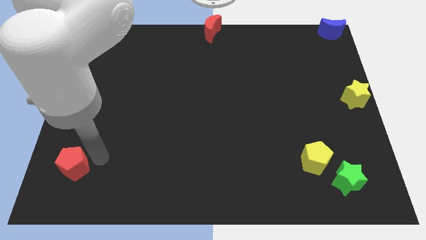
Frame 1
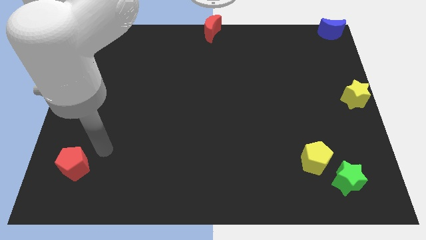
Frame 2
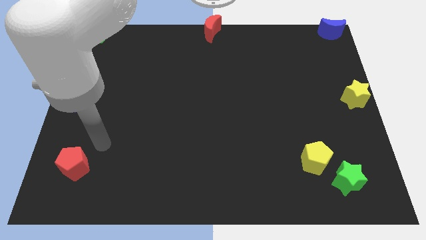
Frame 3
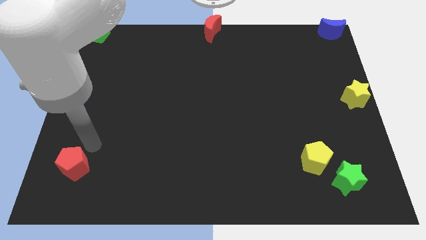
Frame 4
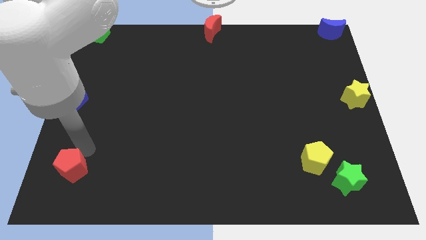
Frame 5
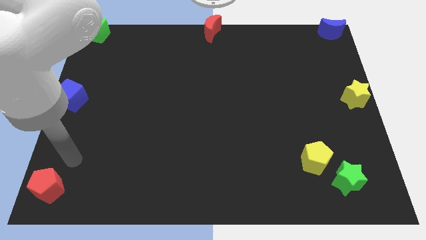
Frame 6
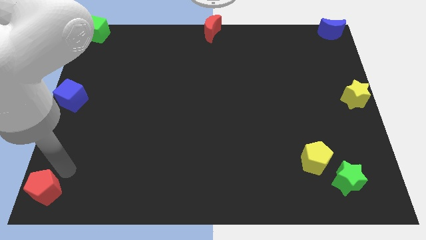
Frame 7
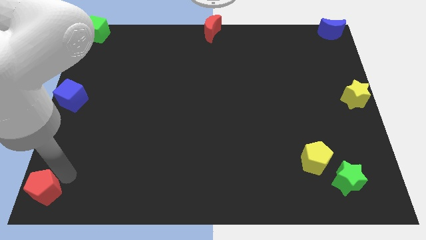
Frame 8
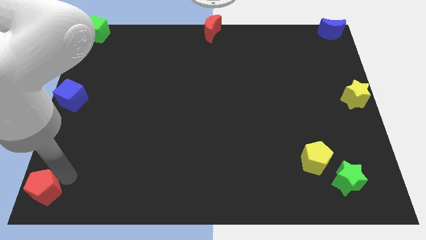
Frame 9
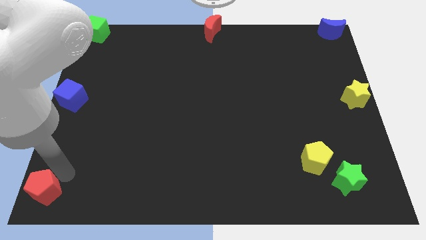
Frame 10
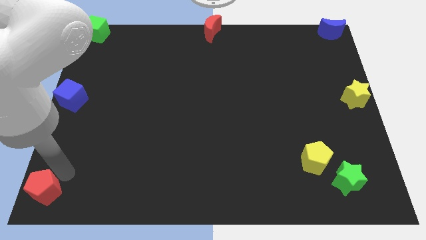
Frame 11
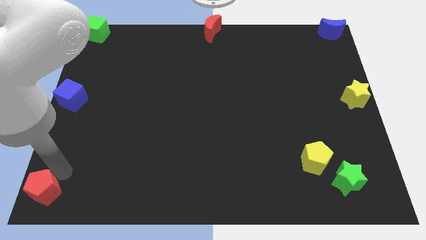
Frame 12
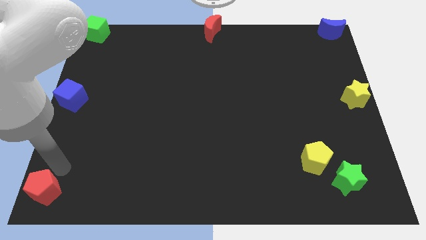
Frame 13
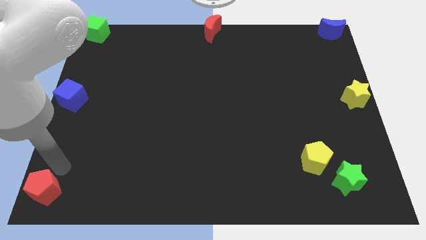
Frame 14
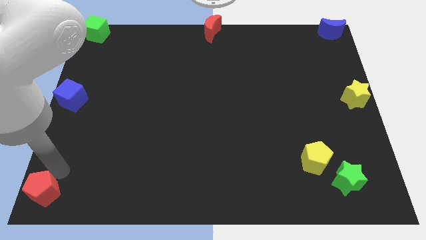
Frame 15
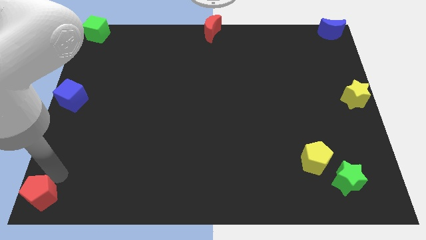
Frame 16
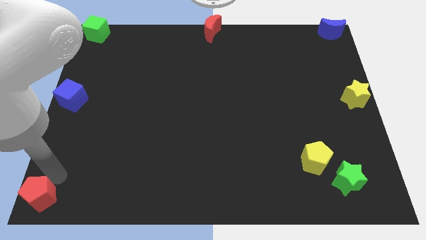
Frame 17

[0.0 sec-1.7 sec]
push the red pentagon to the bottom left corner of the board

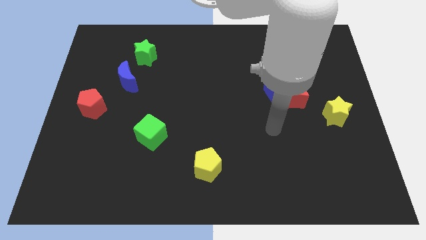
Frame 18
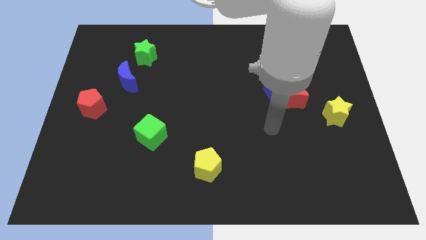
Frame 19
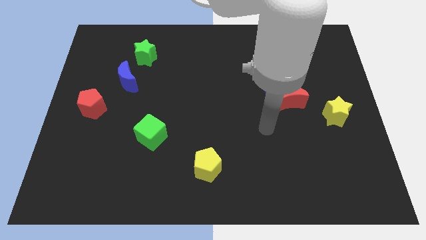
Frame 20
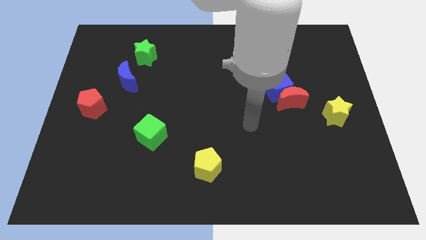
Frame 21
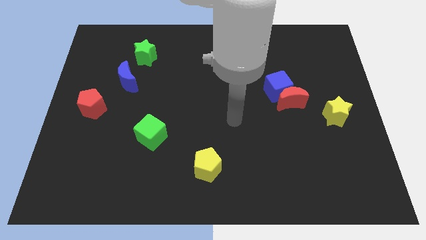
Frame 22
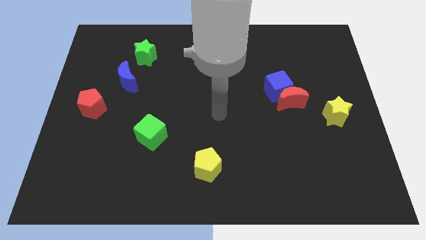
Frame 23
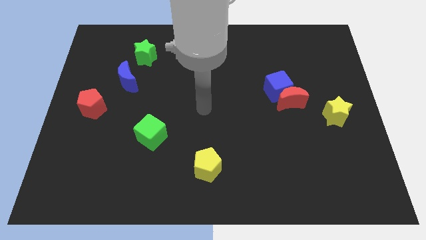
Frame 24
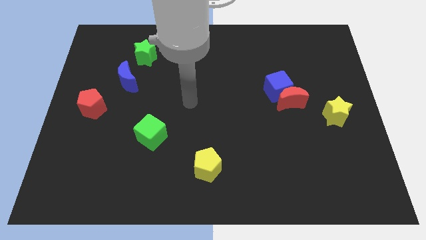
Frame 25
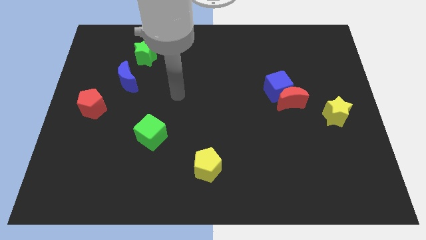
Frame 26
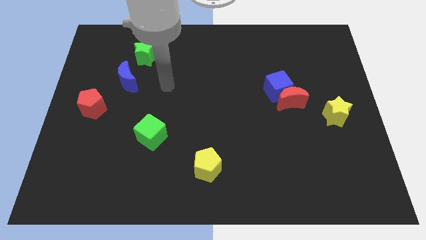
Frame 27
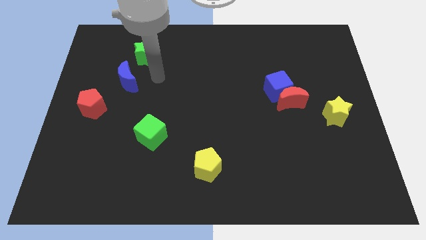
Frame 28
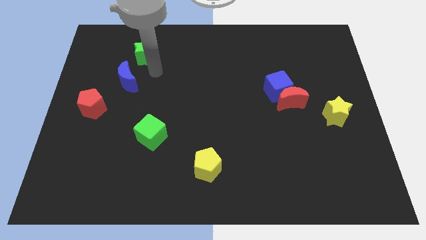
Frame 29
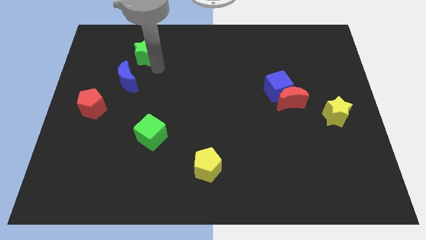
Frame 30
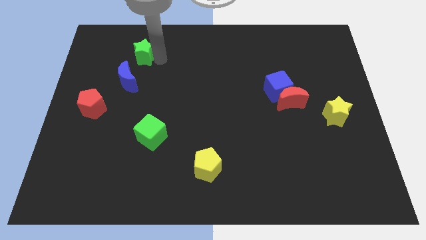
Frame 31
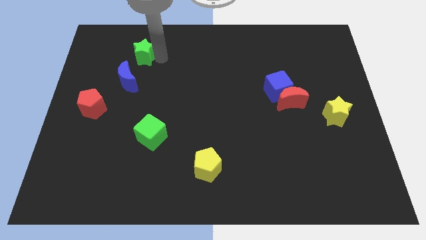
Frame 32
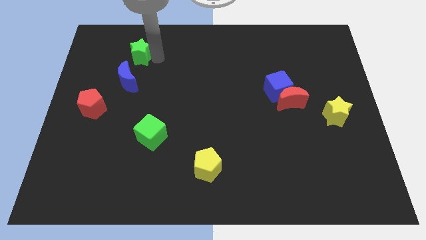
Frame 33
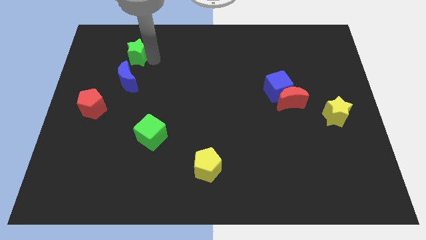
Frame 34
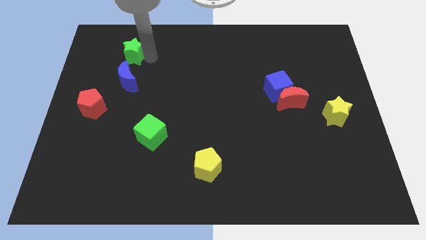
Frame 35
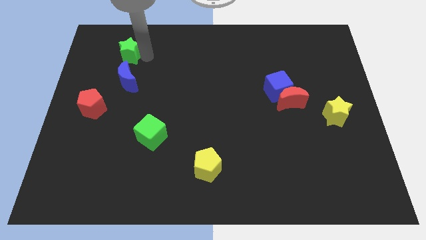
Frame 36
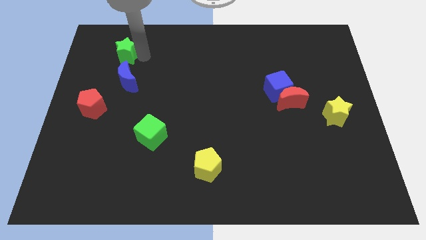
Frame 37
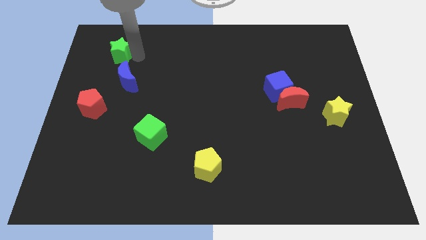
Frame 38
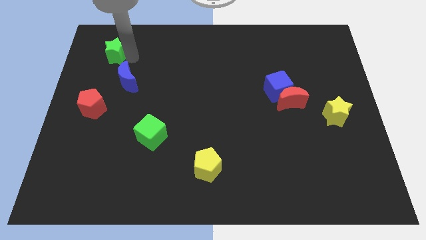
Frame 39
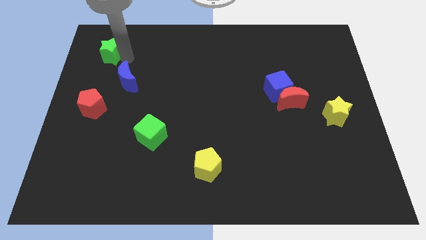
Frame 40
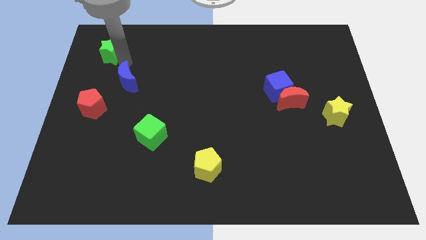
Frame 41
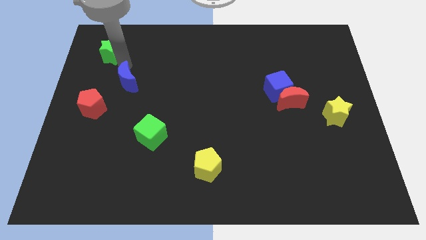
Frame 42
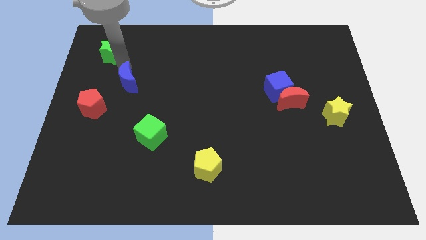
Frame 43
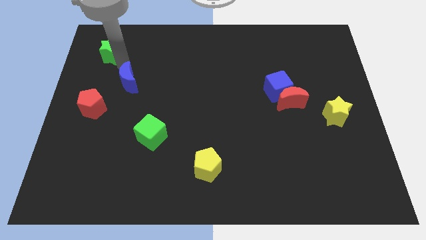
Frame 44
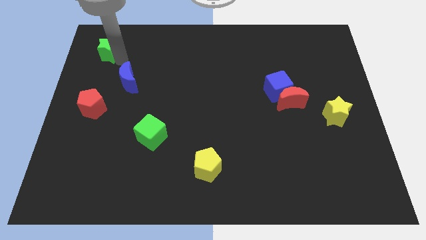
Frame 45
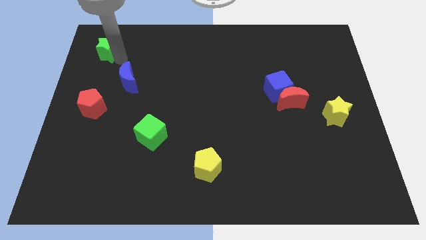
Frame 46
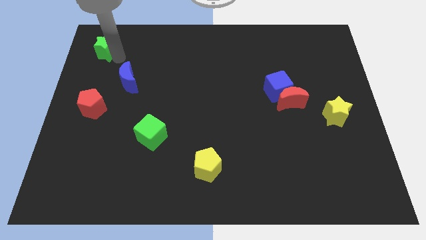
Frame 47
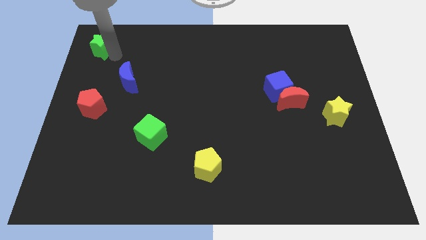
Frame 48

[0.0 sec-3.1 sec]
push the green star to the vertical top side of the red pentagon

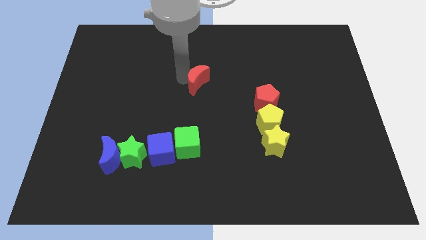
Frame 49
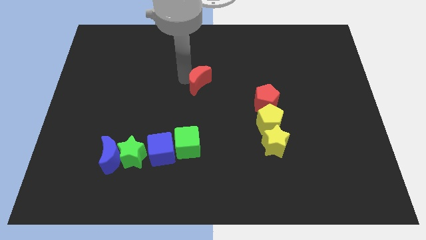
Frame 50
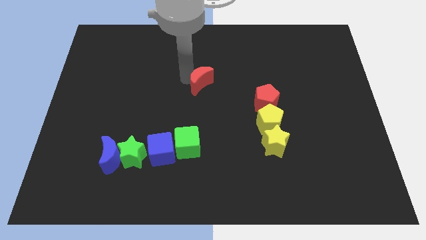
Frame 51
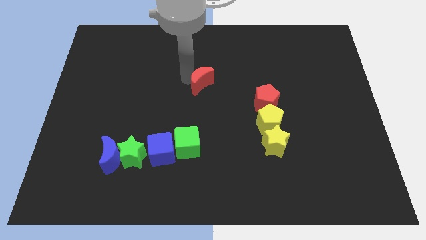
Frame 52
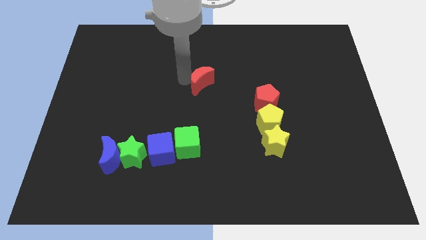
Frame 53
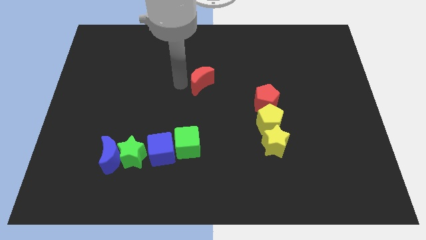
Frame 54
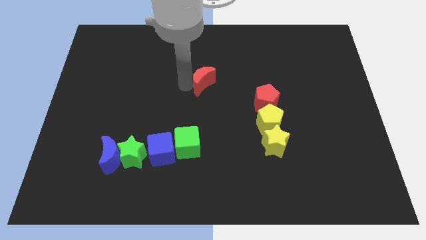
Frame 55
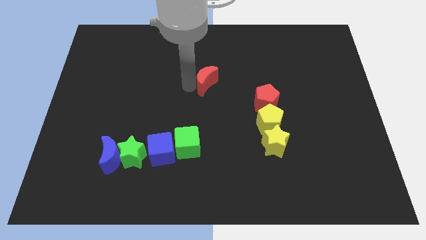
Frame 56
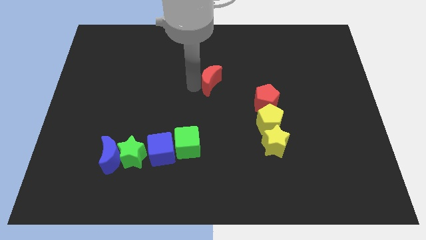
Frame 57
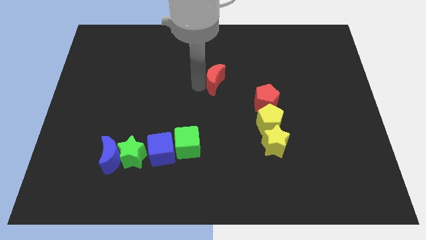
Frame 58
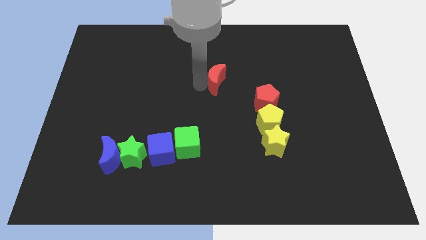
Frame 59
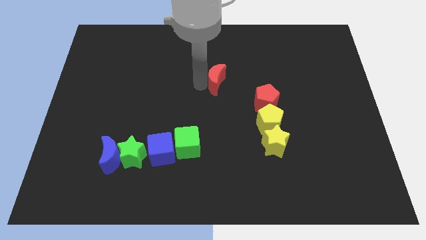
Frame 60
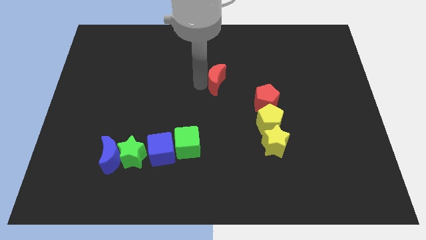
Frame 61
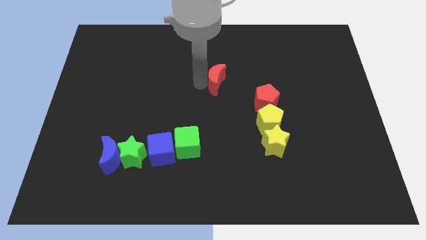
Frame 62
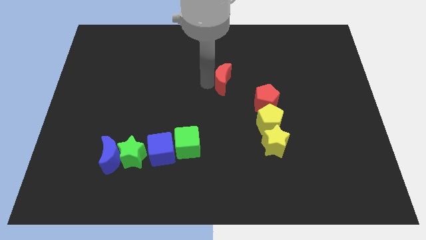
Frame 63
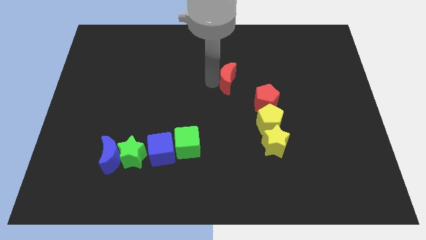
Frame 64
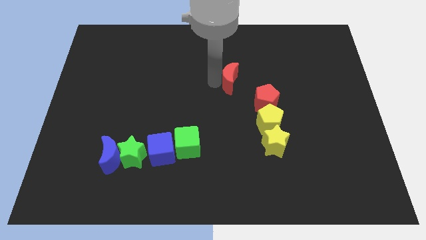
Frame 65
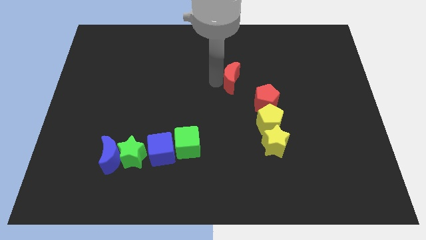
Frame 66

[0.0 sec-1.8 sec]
slightly push the red crescent towards the red pentagon

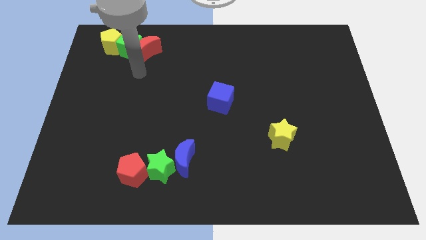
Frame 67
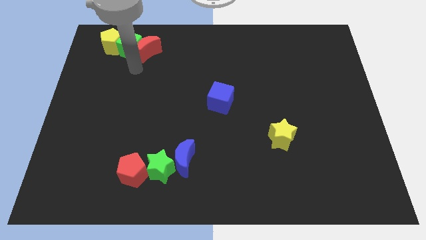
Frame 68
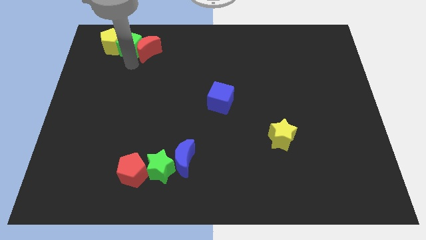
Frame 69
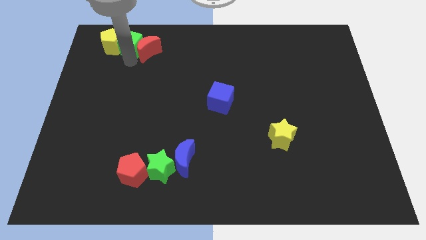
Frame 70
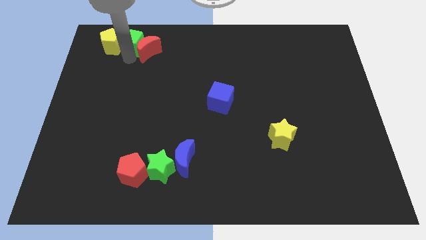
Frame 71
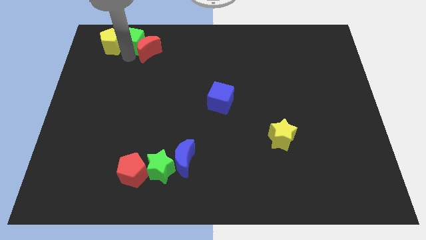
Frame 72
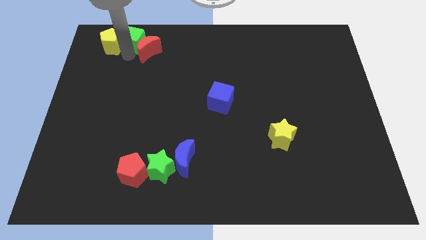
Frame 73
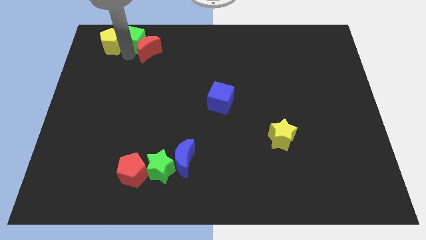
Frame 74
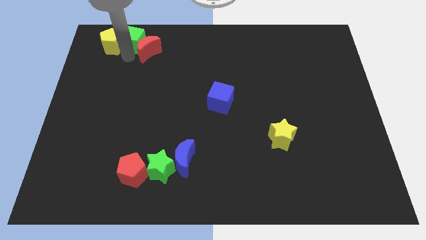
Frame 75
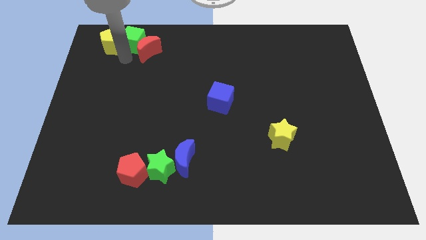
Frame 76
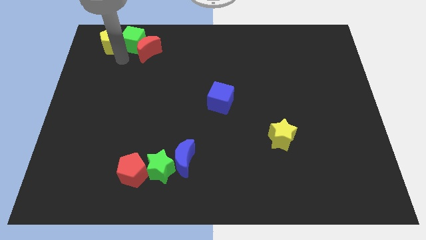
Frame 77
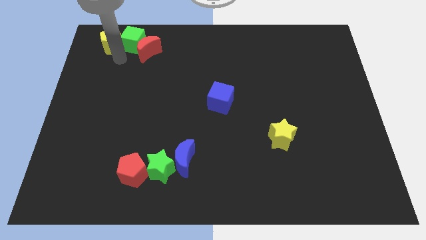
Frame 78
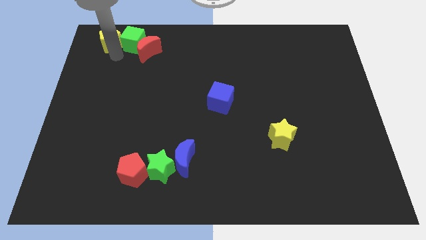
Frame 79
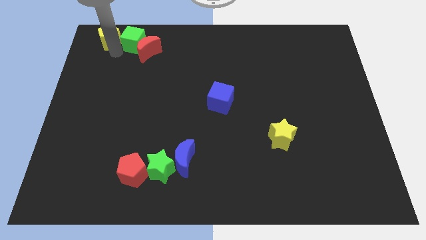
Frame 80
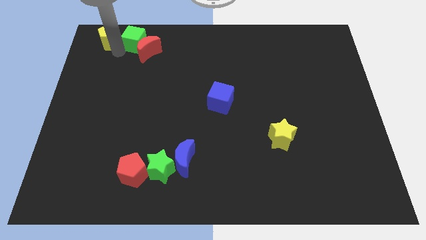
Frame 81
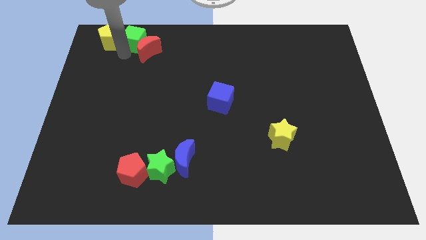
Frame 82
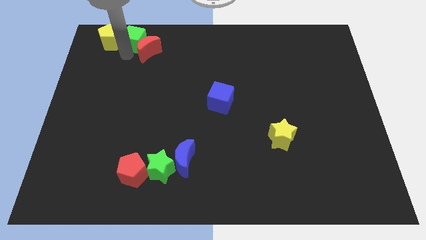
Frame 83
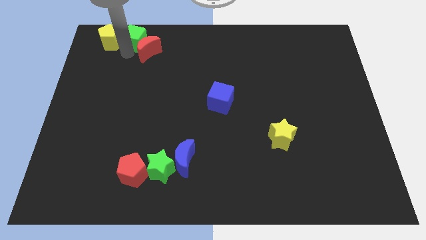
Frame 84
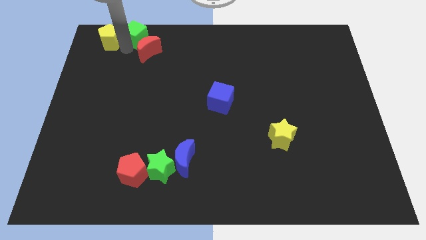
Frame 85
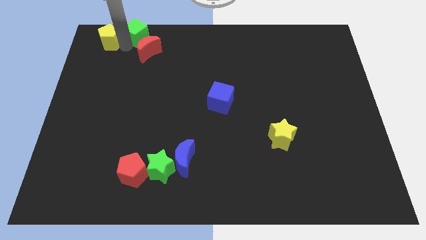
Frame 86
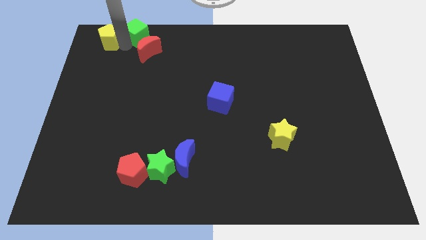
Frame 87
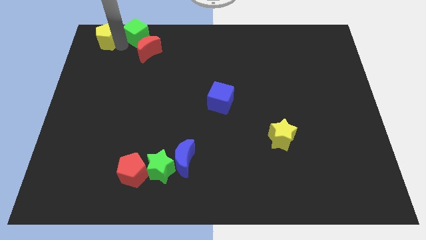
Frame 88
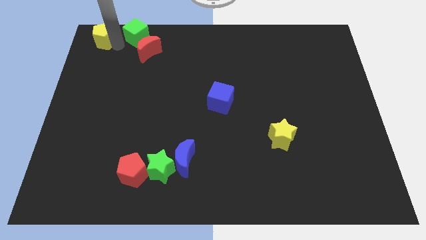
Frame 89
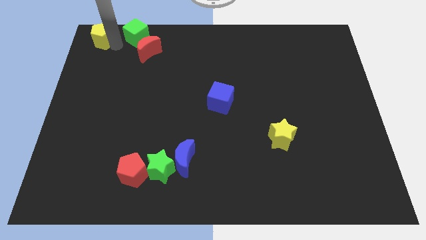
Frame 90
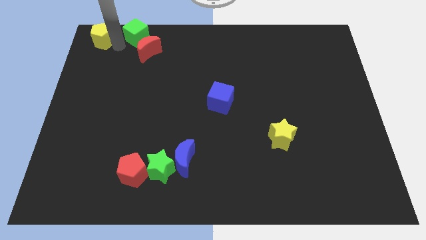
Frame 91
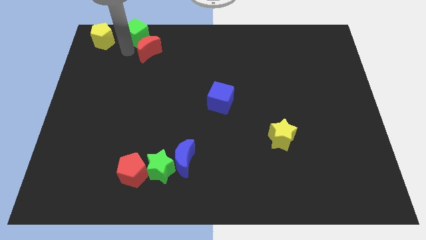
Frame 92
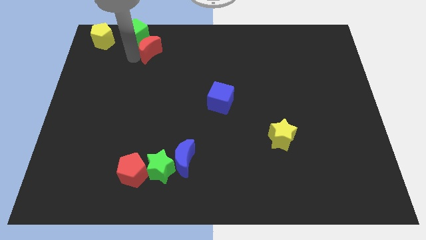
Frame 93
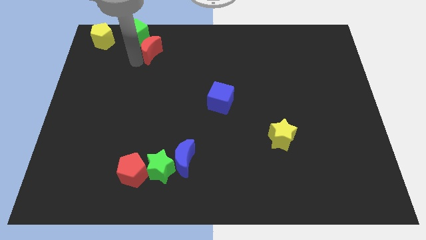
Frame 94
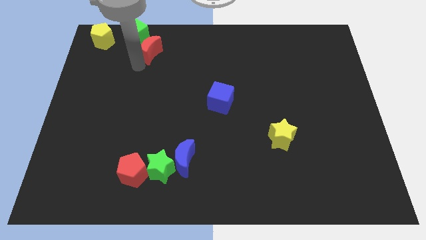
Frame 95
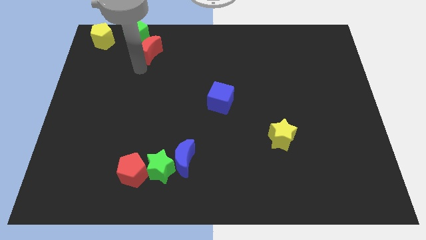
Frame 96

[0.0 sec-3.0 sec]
separate yellow pentagon and green cube
